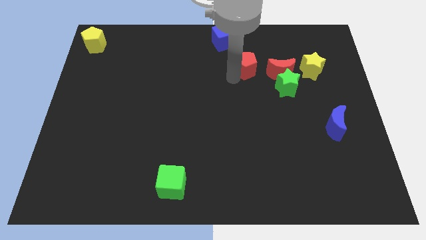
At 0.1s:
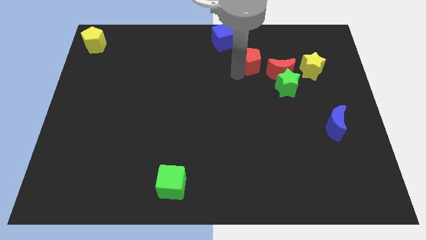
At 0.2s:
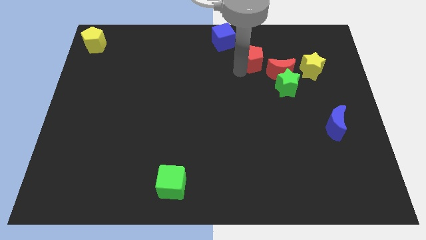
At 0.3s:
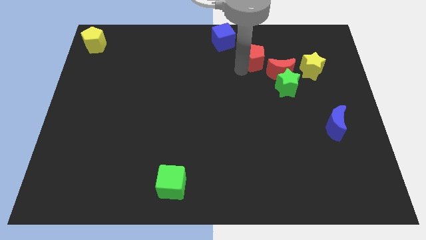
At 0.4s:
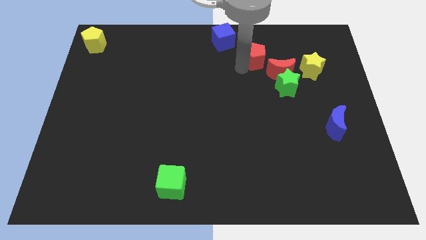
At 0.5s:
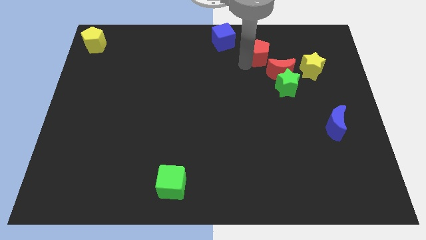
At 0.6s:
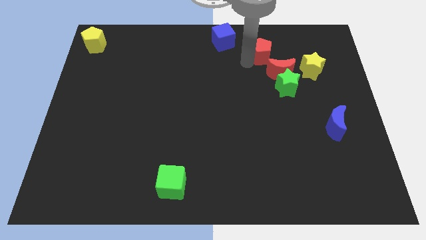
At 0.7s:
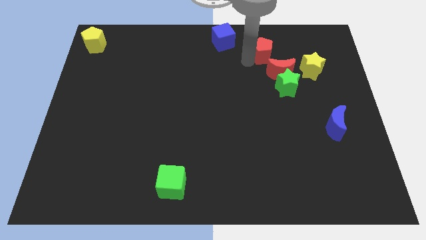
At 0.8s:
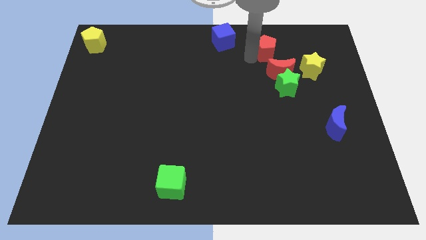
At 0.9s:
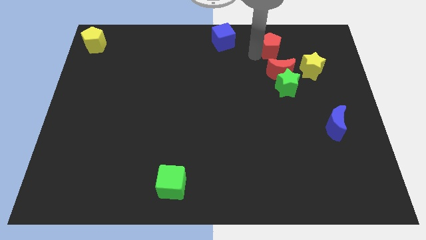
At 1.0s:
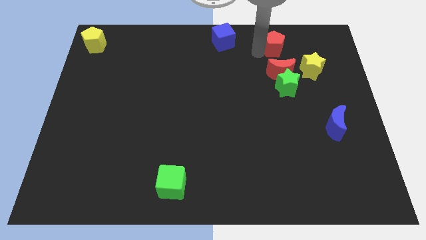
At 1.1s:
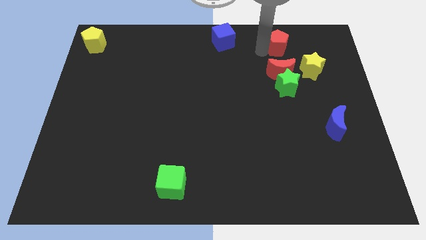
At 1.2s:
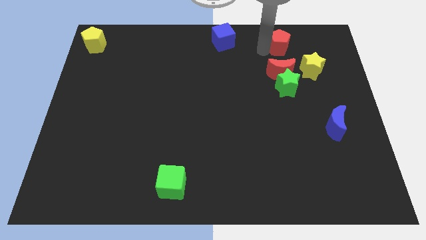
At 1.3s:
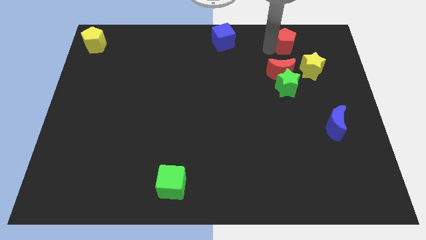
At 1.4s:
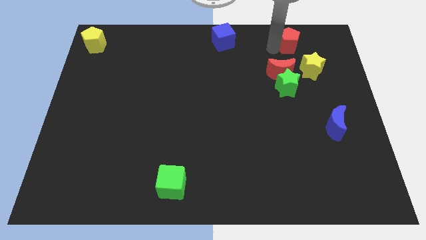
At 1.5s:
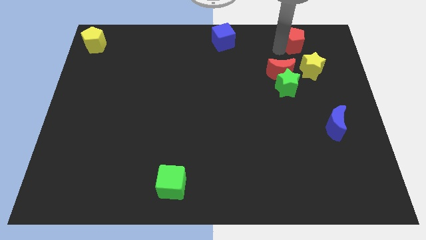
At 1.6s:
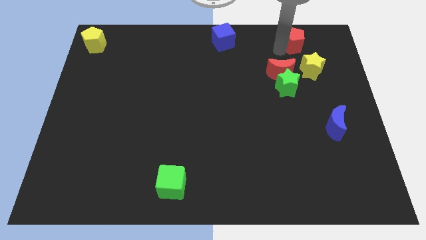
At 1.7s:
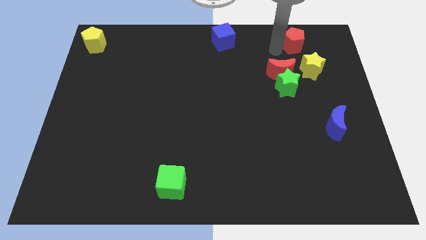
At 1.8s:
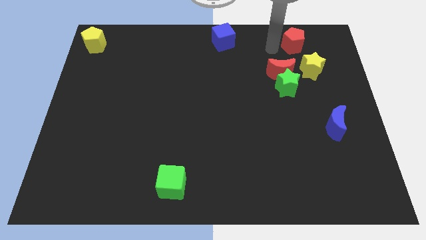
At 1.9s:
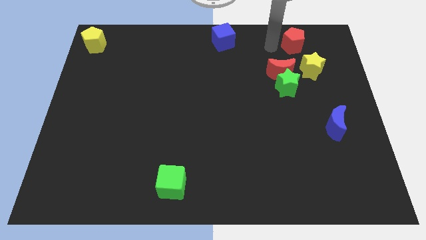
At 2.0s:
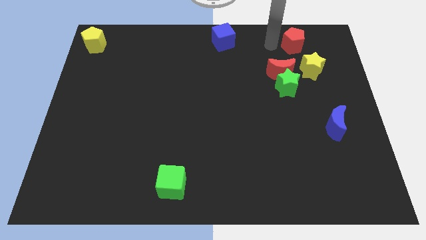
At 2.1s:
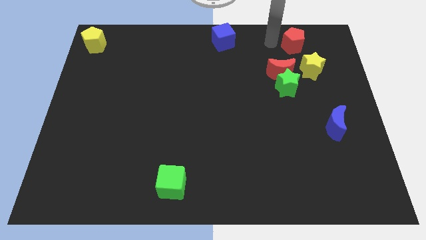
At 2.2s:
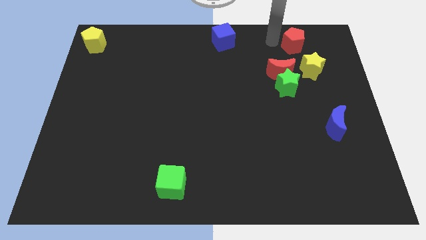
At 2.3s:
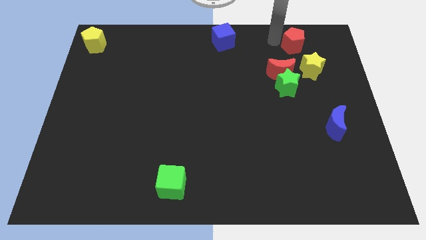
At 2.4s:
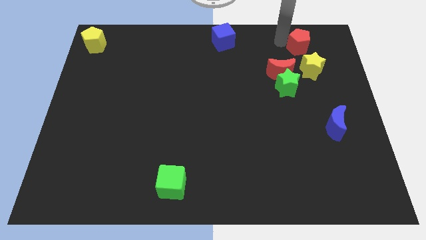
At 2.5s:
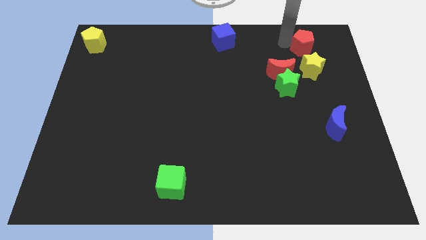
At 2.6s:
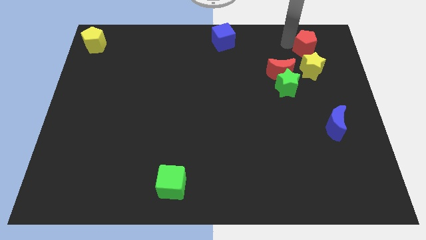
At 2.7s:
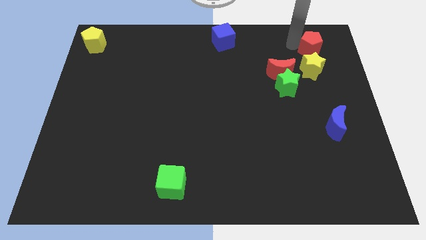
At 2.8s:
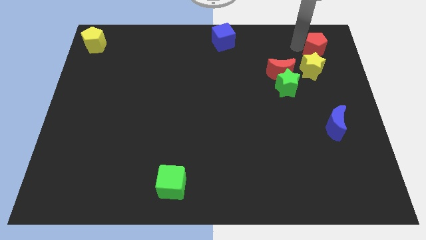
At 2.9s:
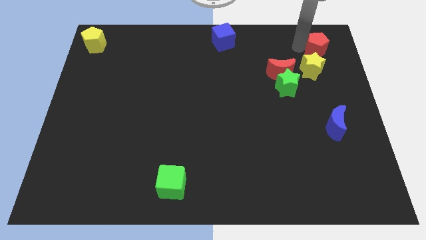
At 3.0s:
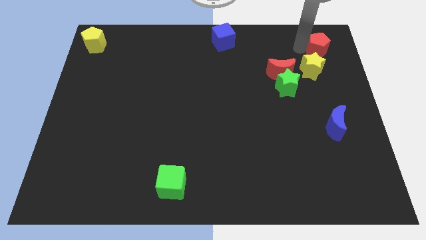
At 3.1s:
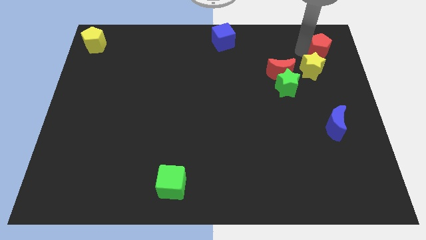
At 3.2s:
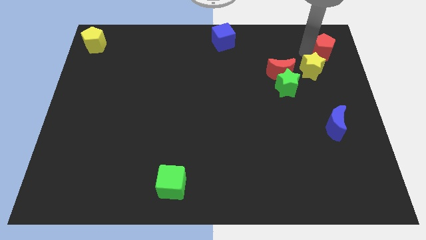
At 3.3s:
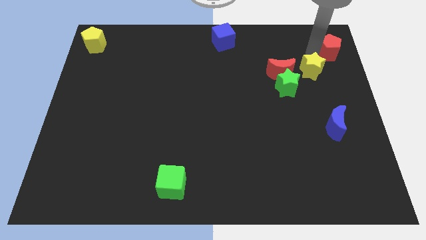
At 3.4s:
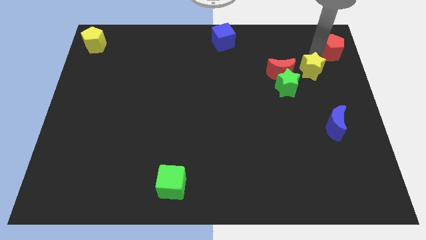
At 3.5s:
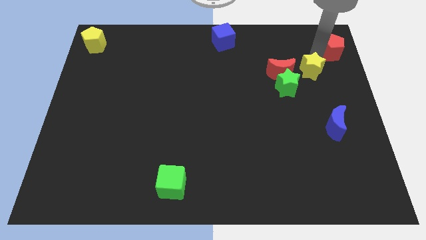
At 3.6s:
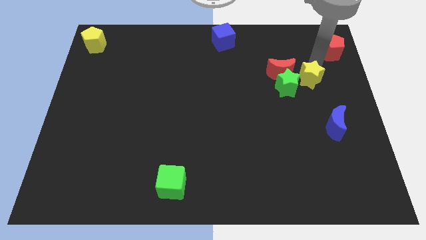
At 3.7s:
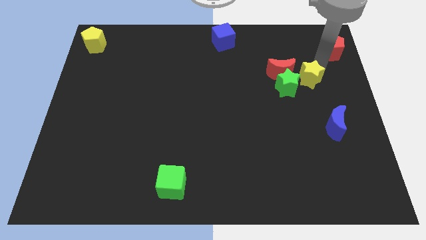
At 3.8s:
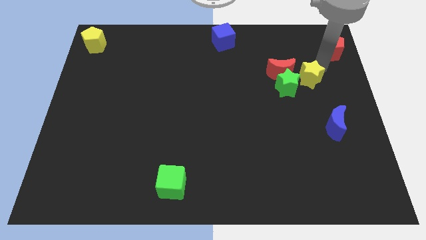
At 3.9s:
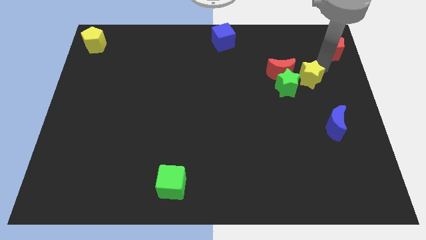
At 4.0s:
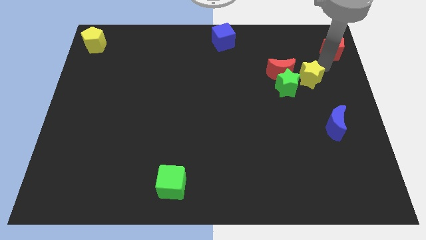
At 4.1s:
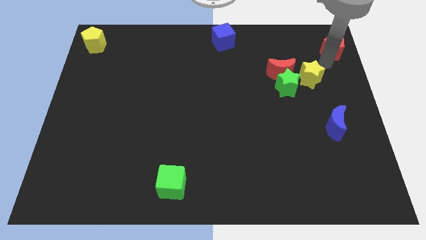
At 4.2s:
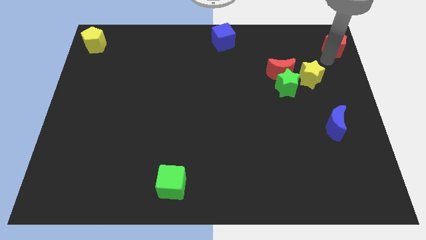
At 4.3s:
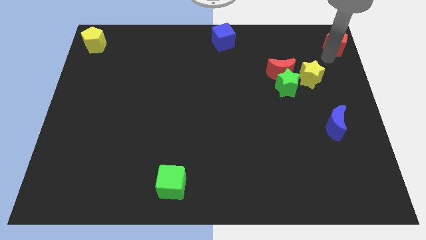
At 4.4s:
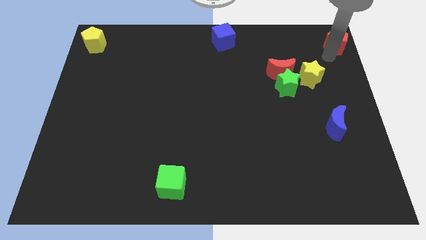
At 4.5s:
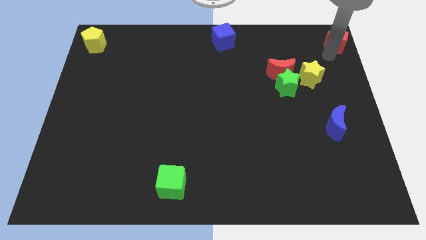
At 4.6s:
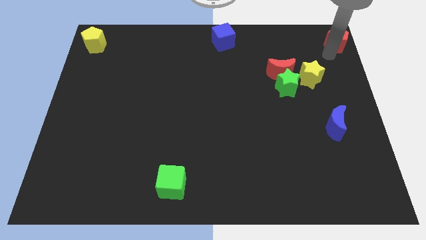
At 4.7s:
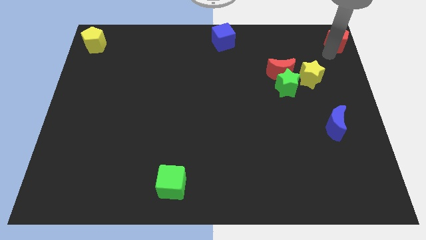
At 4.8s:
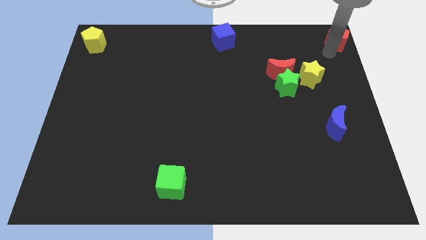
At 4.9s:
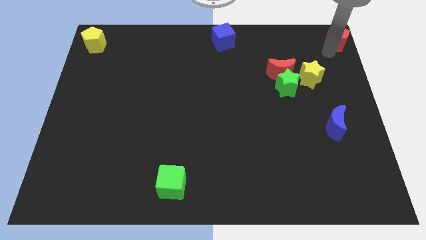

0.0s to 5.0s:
push red pentagon towards top right corner of the board

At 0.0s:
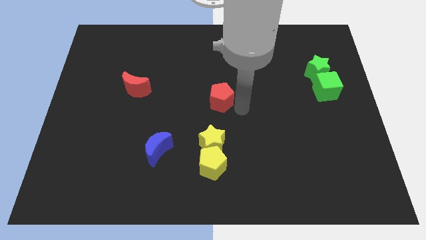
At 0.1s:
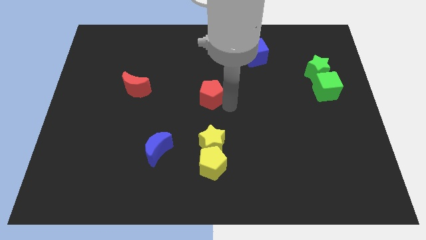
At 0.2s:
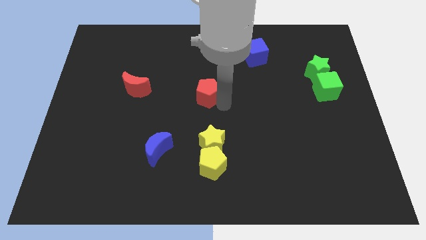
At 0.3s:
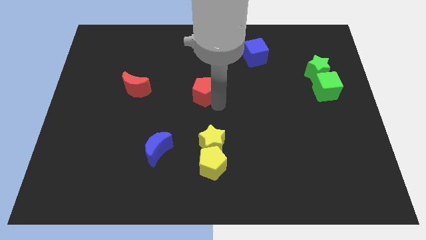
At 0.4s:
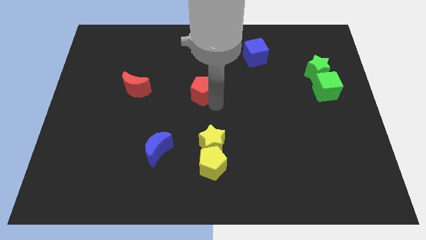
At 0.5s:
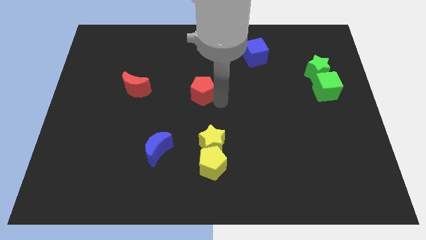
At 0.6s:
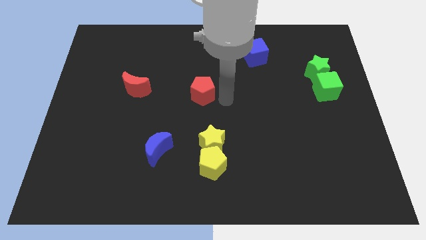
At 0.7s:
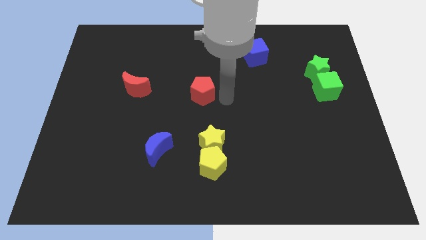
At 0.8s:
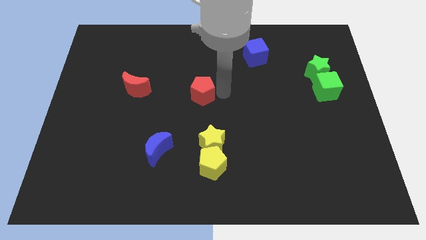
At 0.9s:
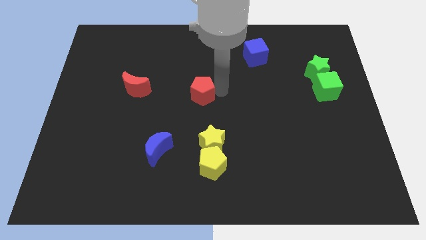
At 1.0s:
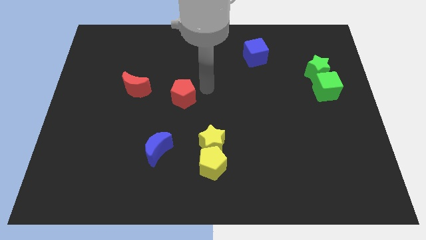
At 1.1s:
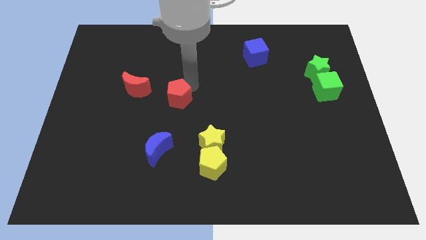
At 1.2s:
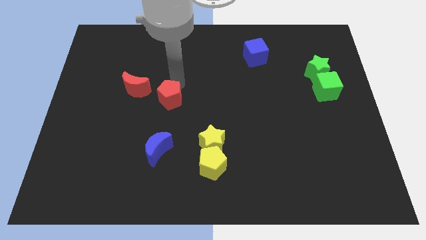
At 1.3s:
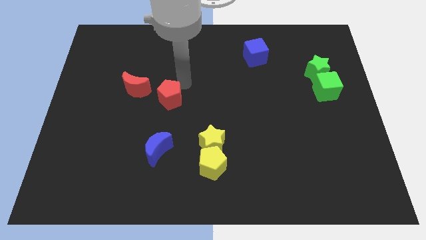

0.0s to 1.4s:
place red pentagon into red moon

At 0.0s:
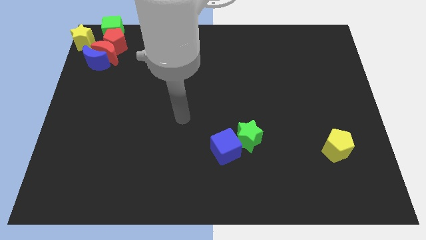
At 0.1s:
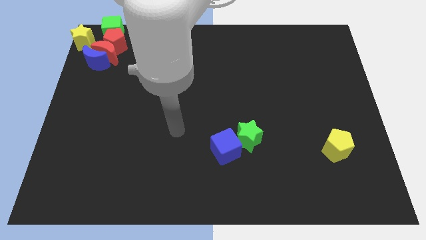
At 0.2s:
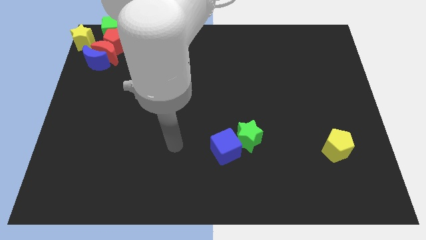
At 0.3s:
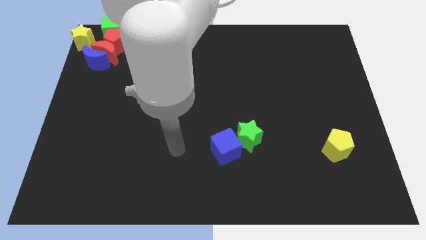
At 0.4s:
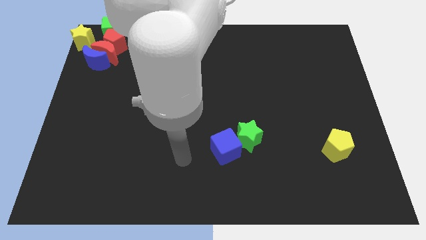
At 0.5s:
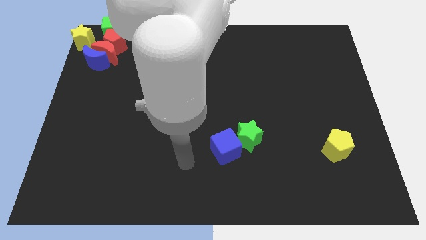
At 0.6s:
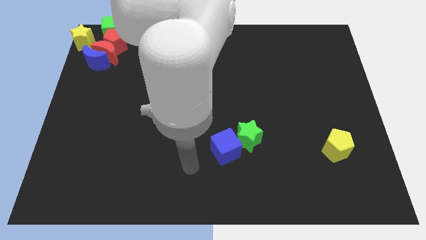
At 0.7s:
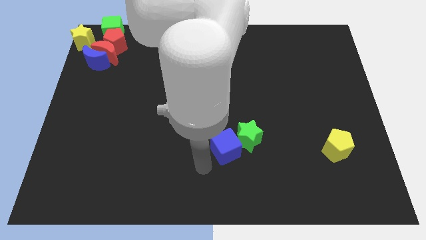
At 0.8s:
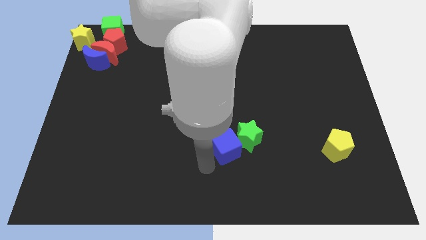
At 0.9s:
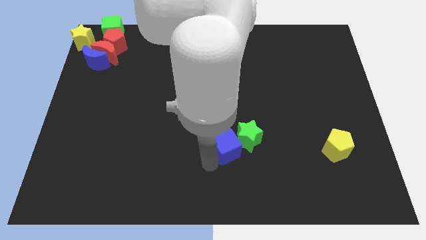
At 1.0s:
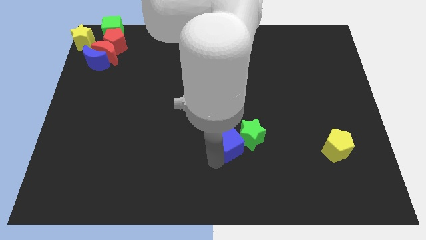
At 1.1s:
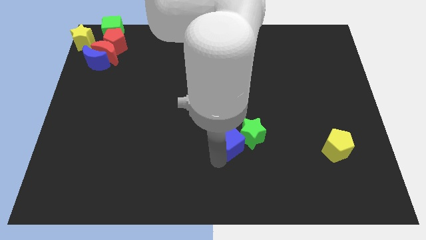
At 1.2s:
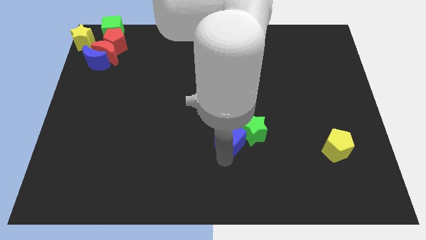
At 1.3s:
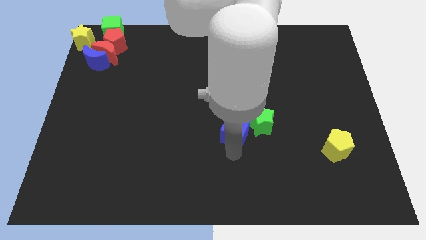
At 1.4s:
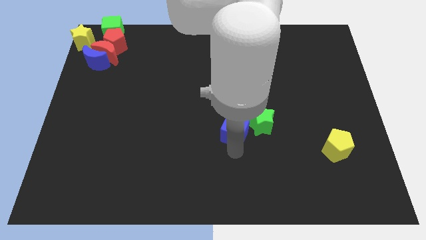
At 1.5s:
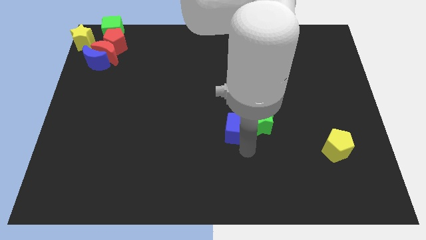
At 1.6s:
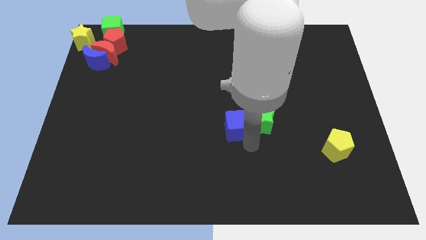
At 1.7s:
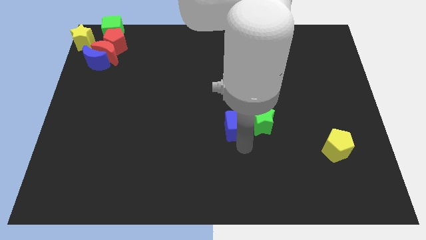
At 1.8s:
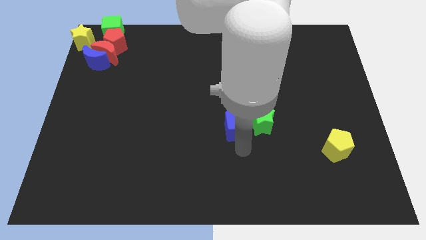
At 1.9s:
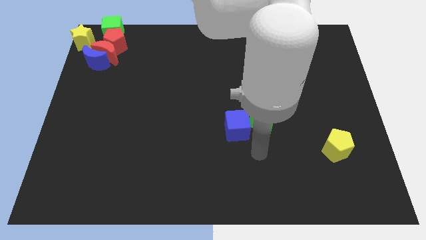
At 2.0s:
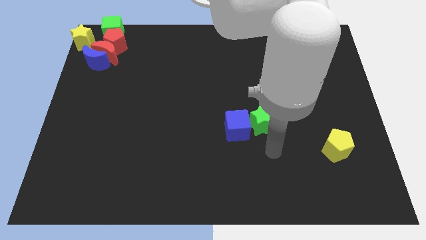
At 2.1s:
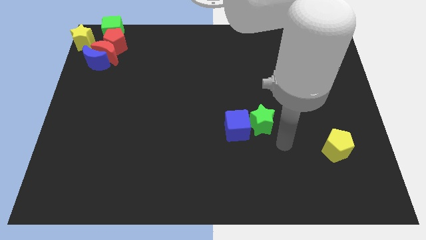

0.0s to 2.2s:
push the green star with the blue cube

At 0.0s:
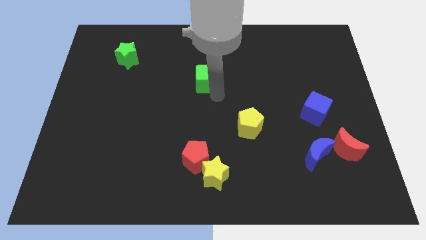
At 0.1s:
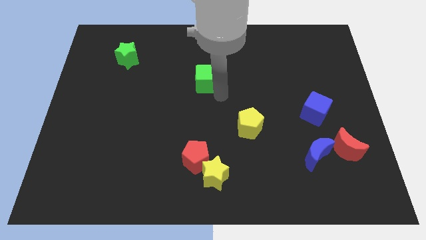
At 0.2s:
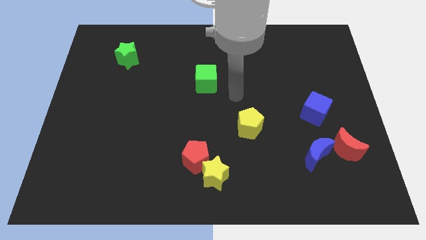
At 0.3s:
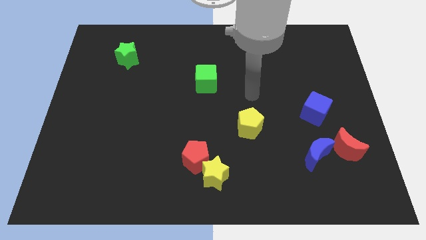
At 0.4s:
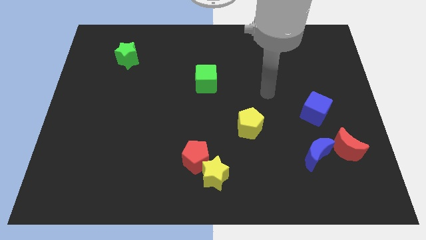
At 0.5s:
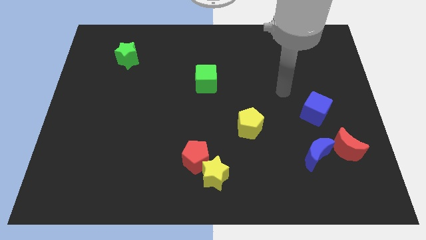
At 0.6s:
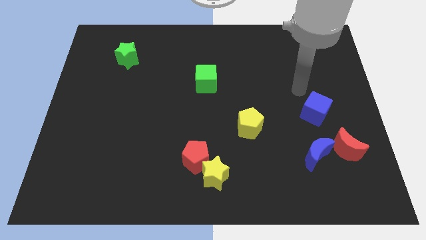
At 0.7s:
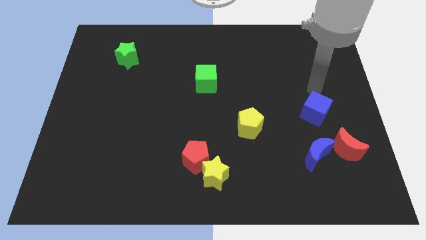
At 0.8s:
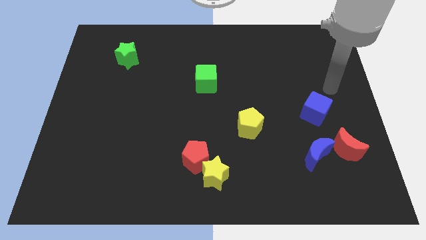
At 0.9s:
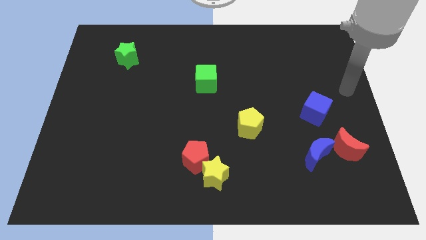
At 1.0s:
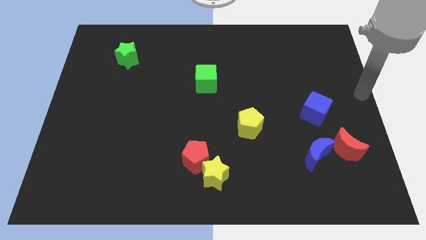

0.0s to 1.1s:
move yourself to the center right of the board
